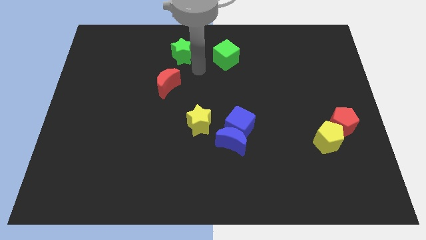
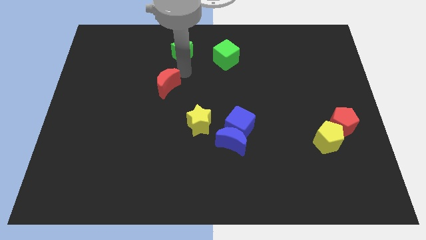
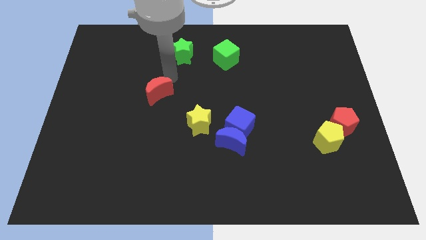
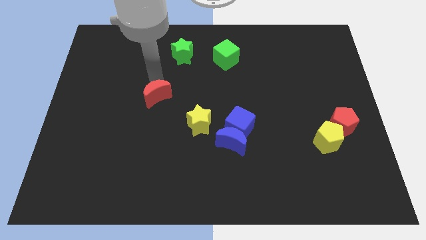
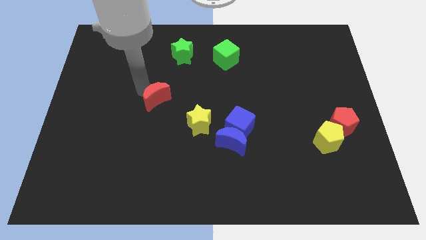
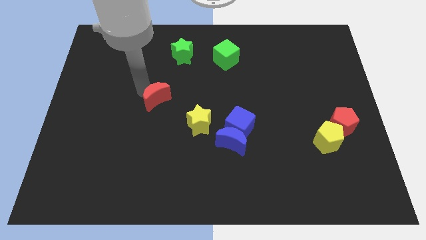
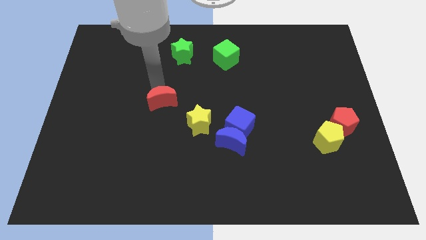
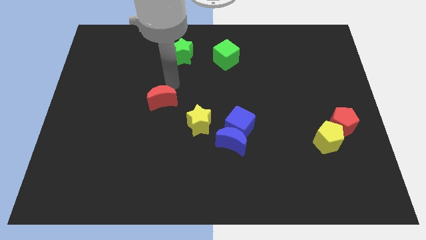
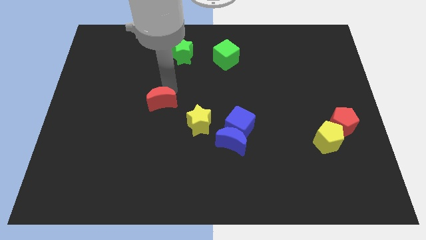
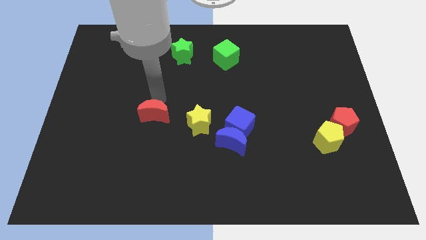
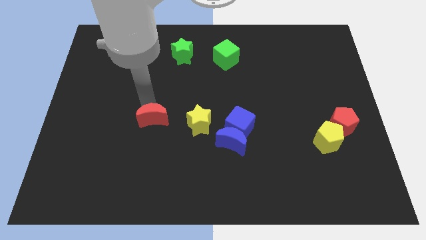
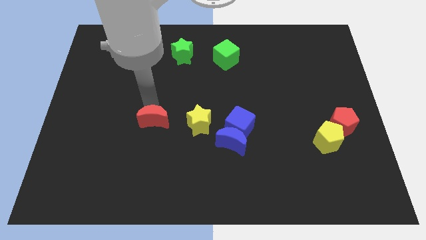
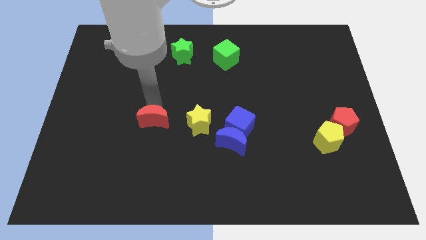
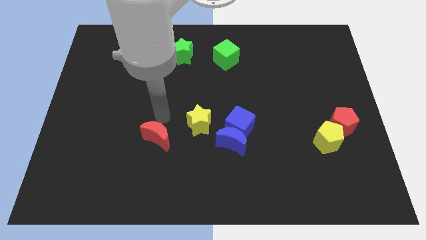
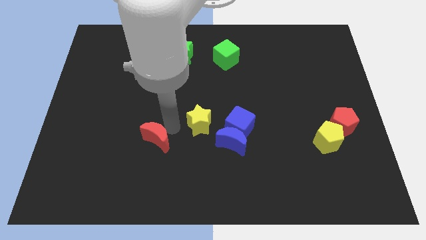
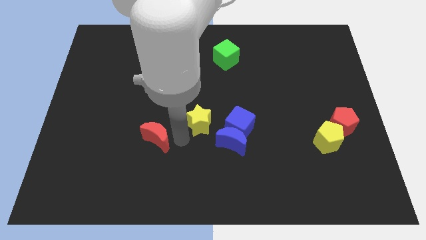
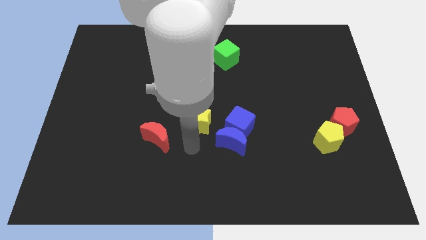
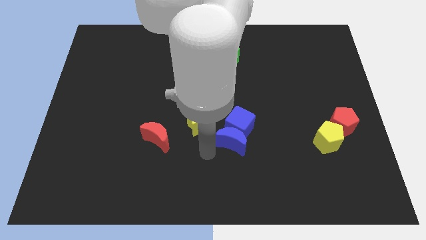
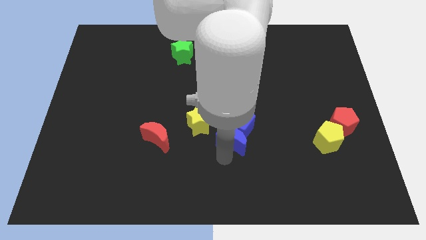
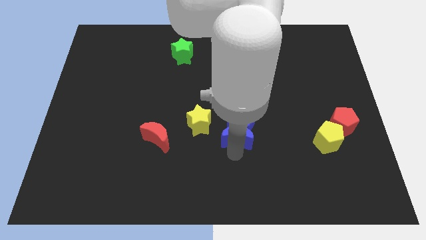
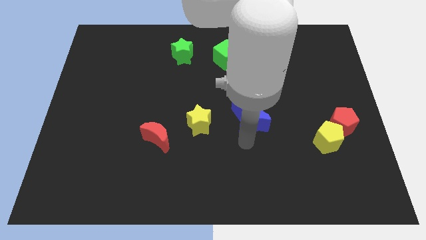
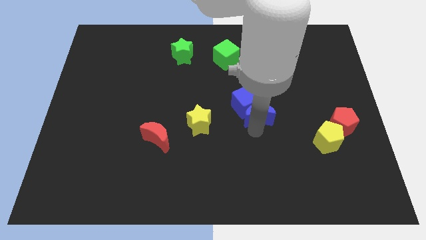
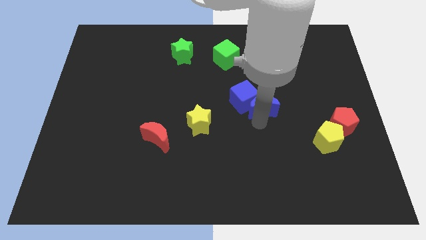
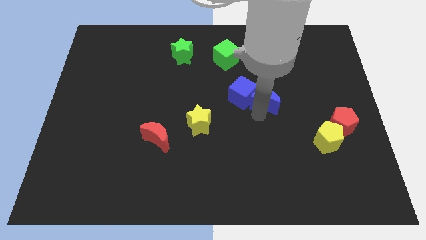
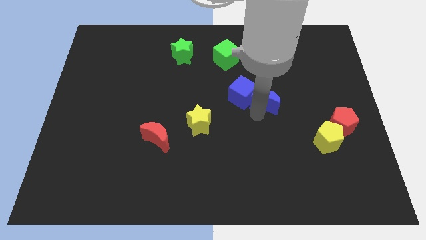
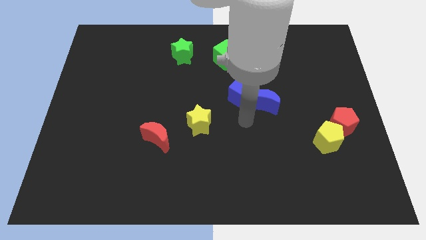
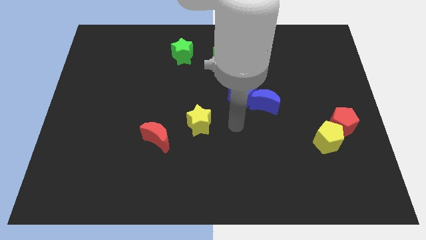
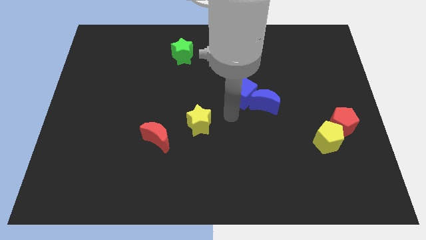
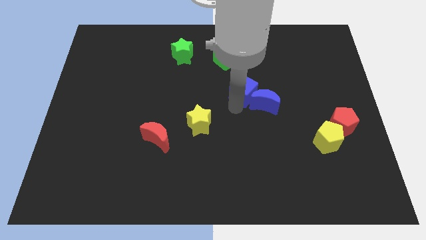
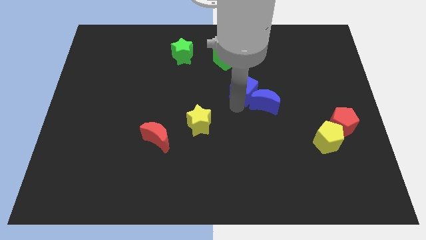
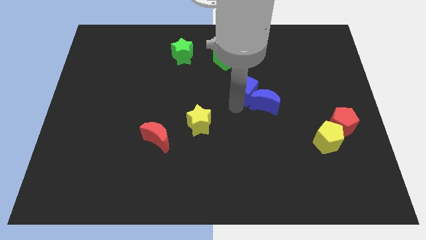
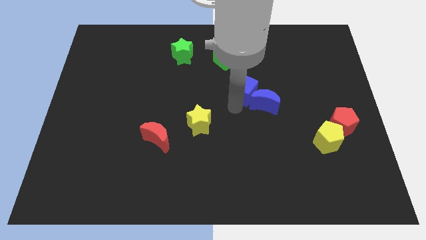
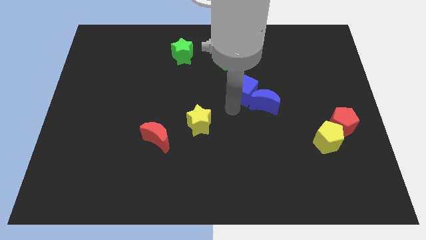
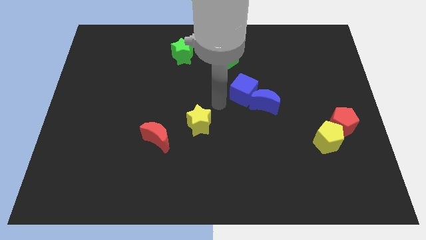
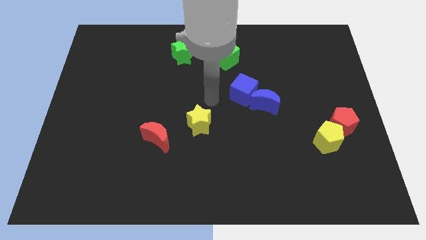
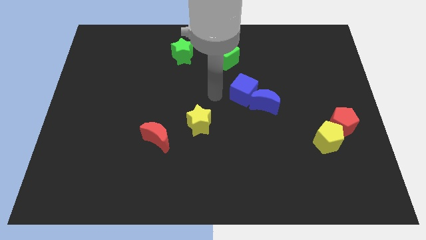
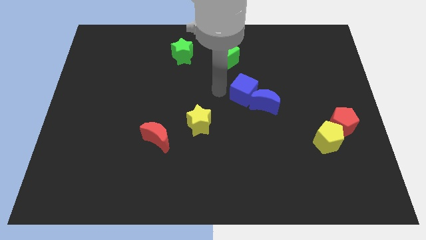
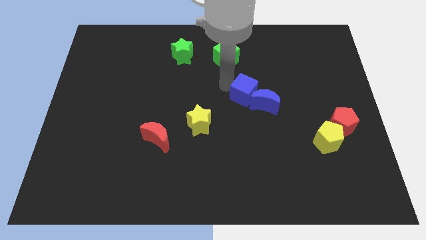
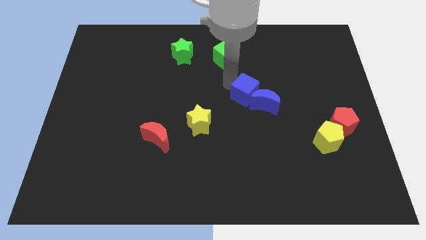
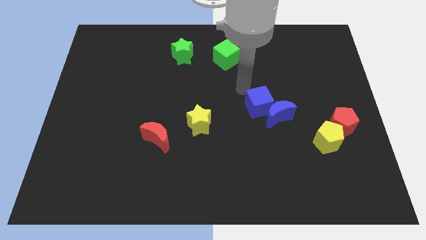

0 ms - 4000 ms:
move the red crescent and both blue blocks diagonal to the yellow star

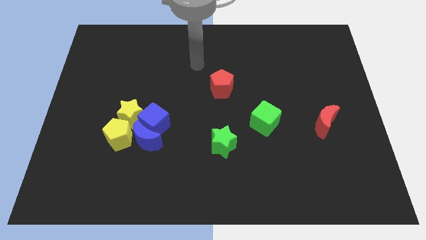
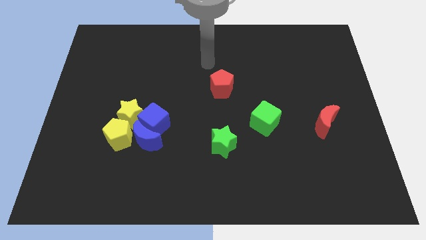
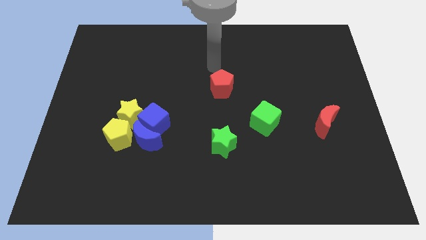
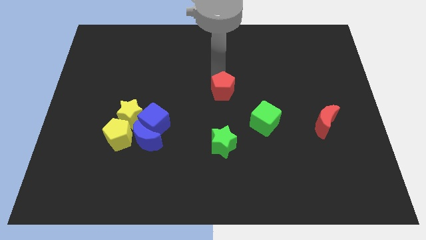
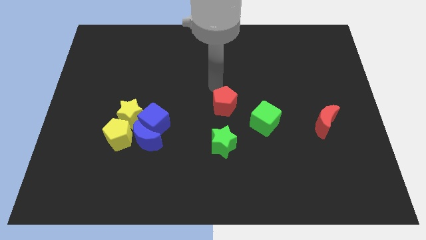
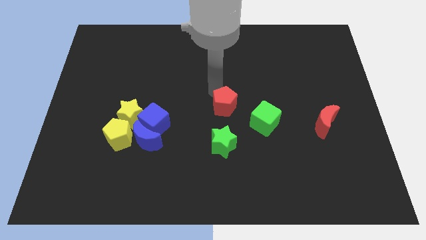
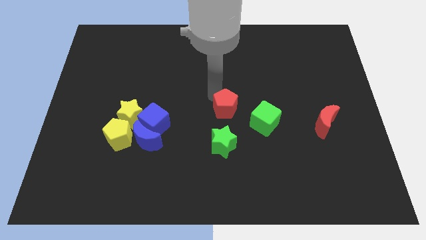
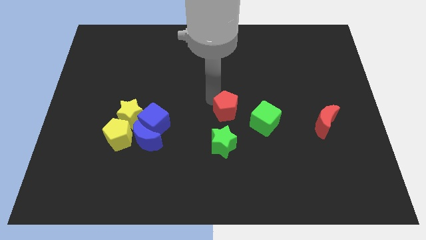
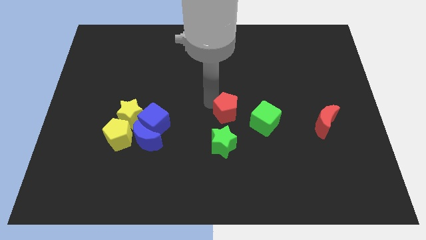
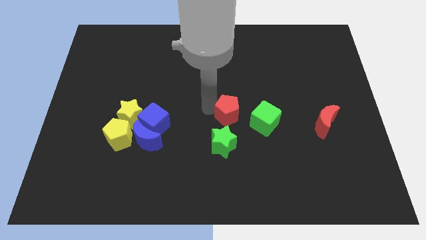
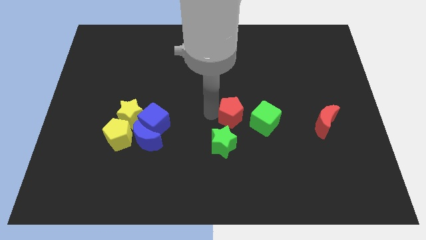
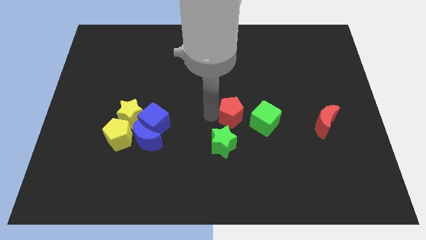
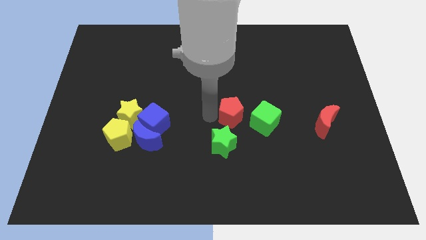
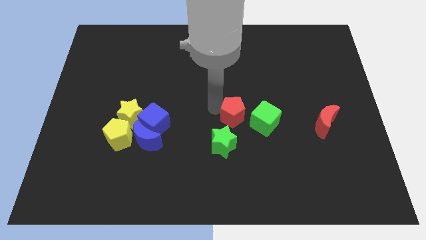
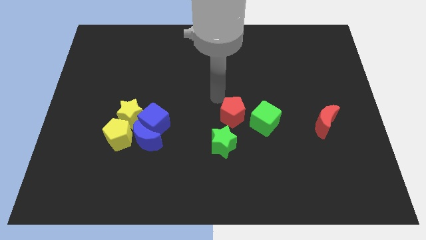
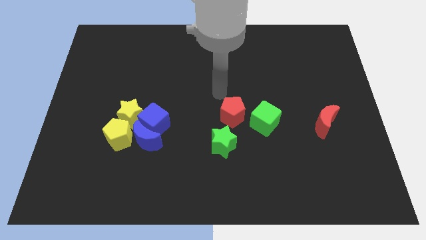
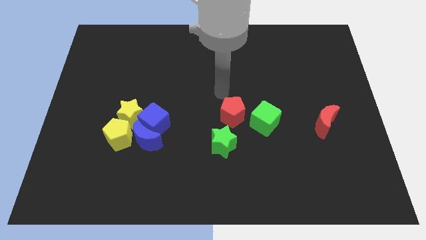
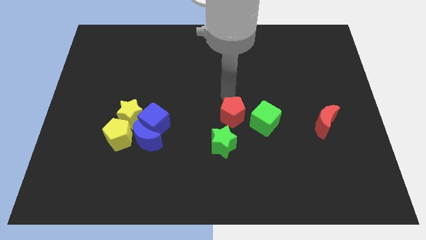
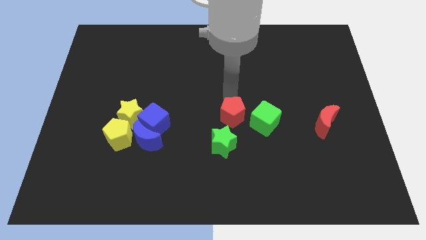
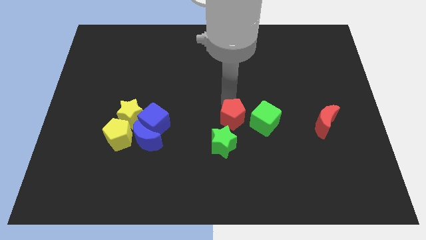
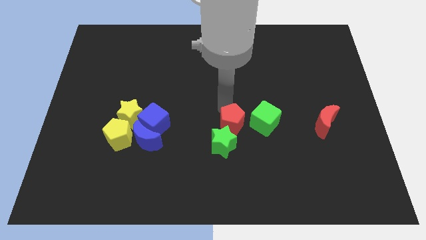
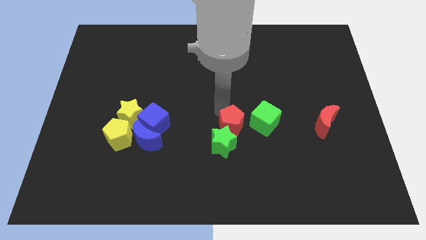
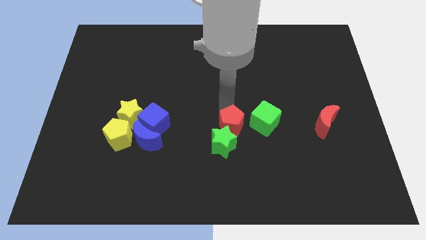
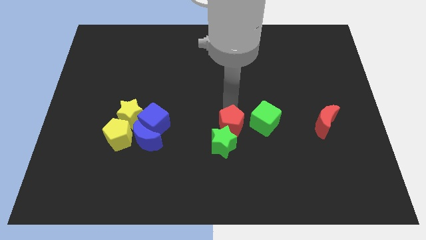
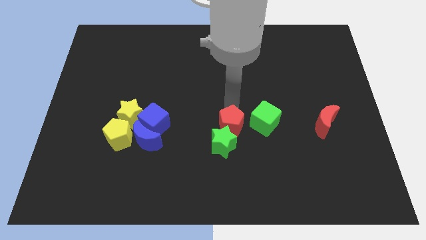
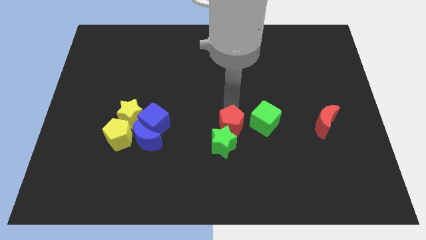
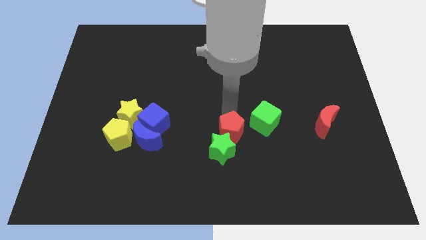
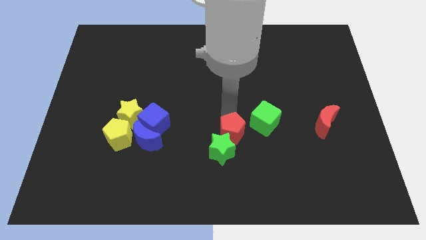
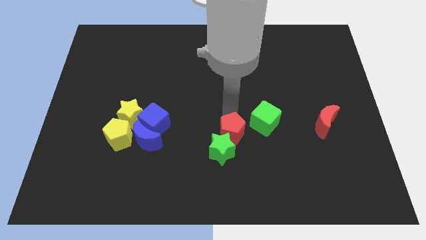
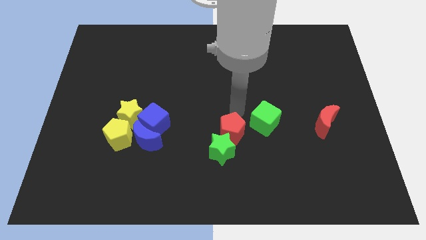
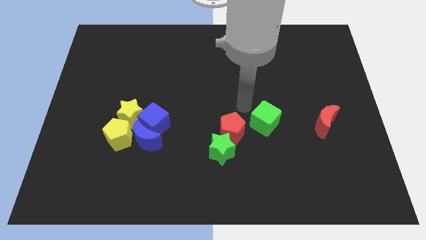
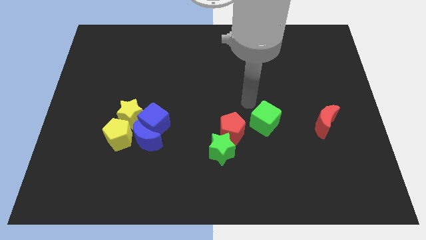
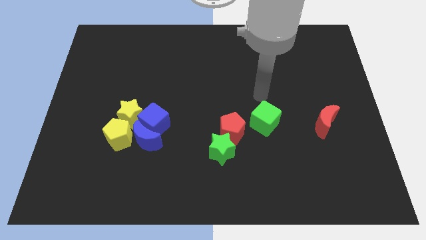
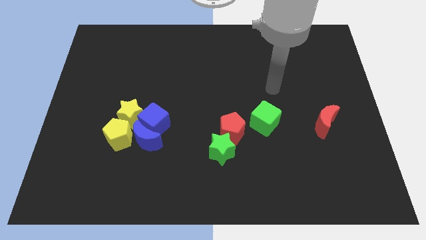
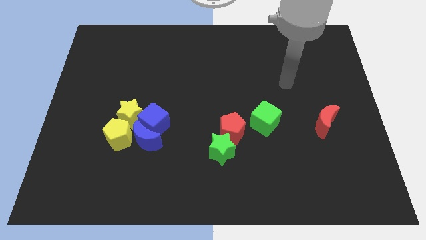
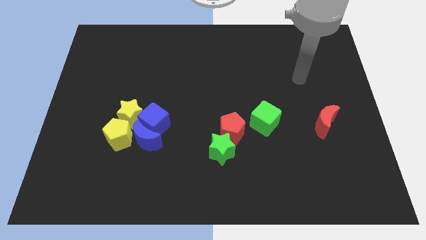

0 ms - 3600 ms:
push red pentagon into the green star

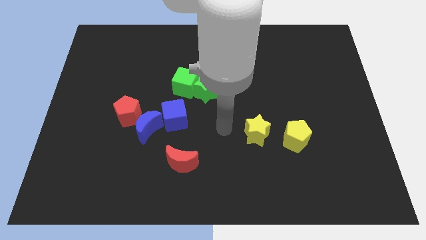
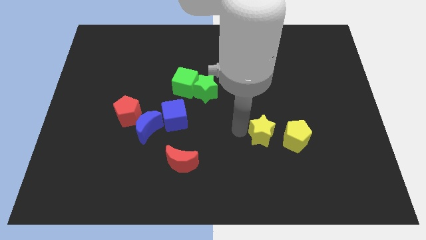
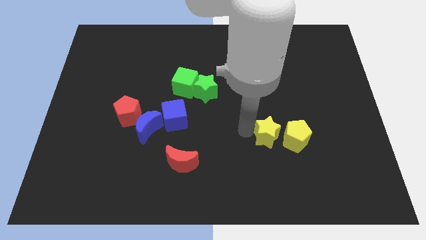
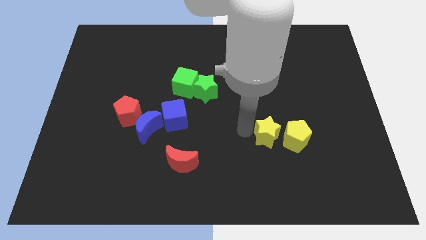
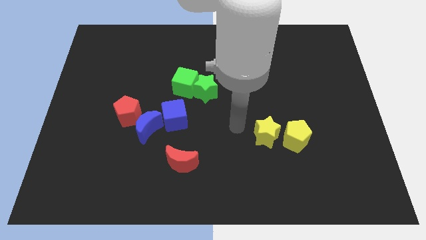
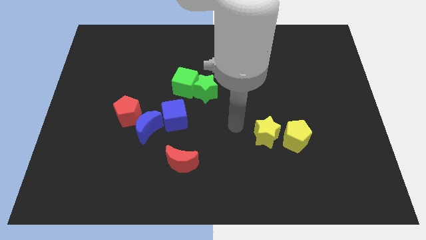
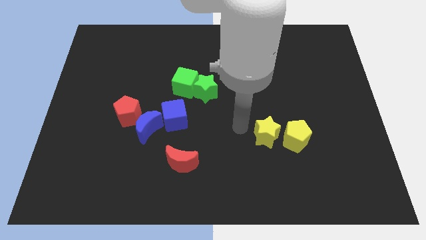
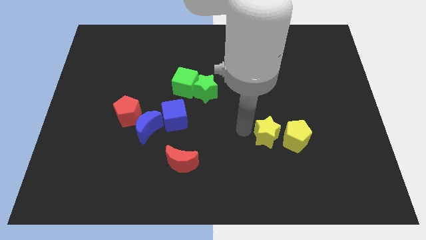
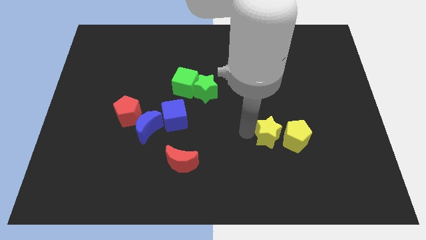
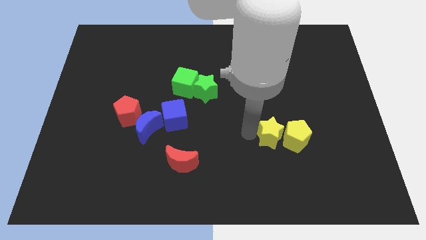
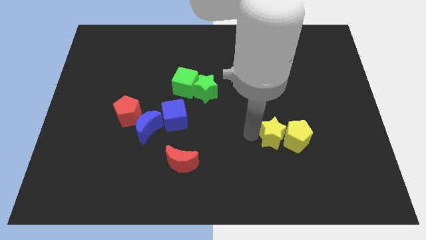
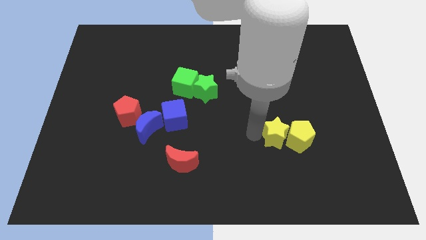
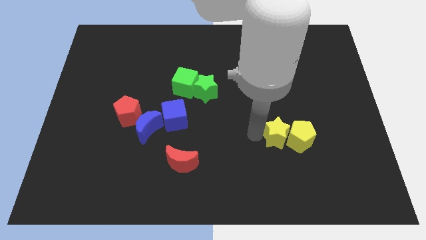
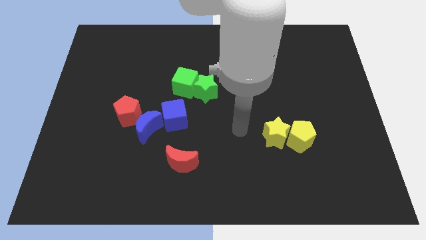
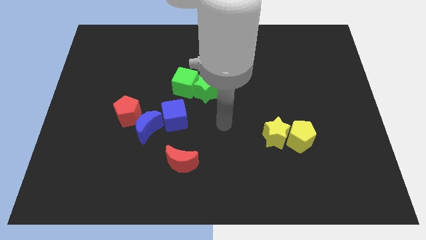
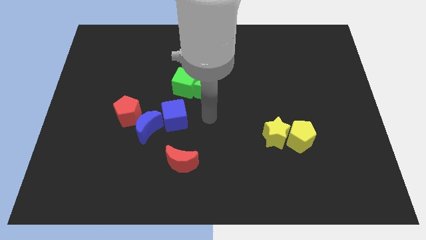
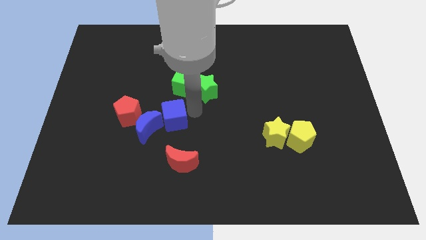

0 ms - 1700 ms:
place a yellow star beside the yellow pentagon
